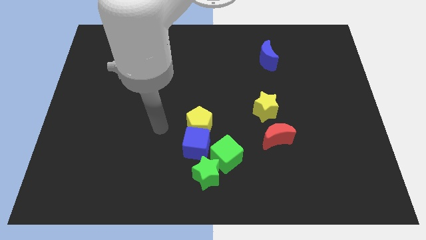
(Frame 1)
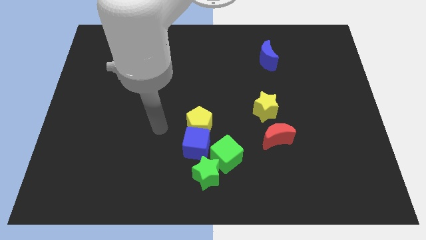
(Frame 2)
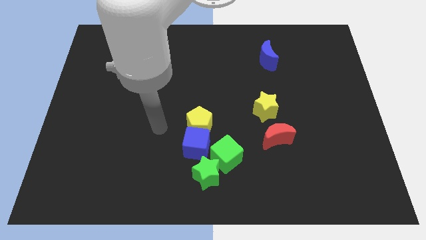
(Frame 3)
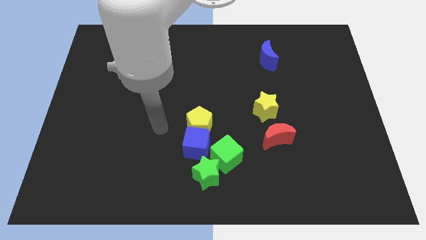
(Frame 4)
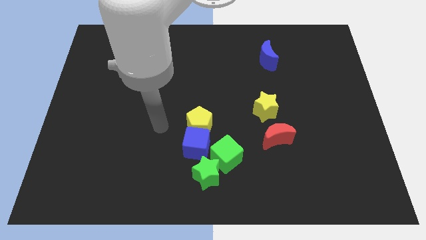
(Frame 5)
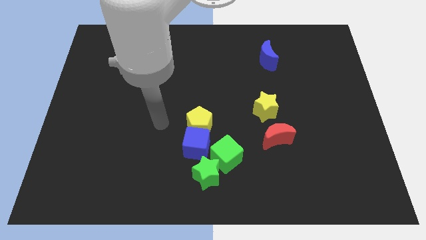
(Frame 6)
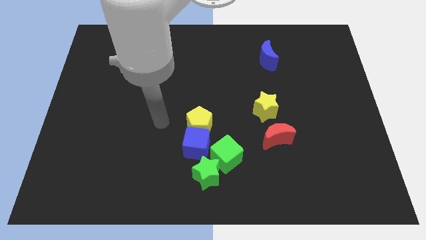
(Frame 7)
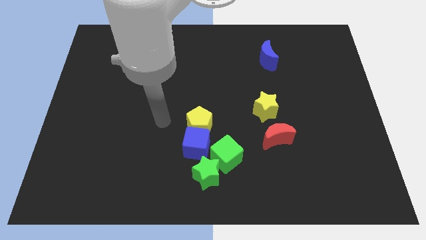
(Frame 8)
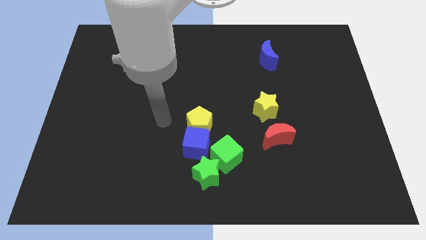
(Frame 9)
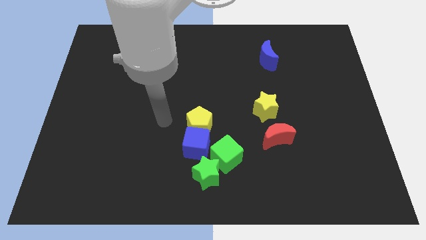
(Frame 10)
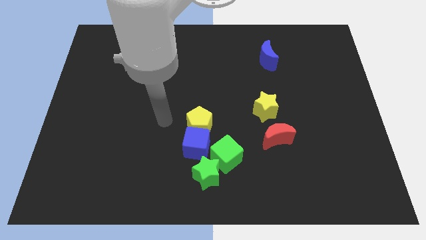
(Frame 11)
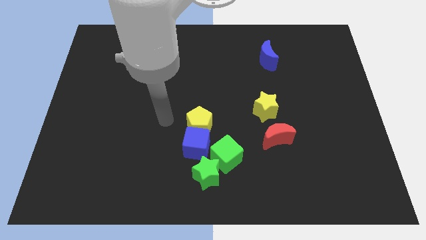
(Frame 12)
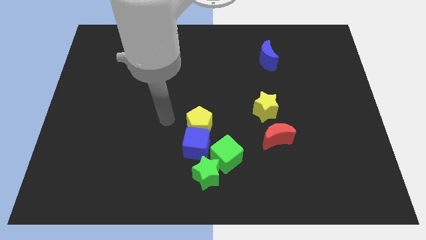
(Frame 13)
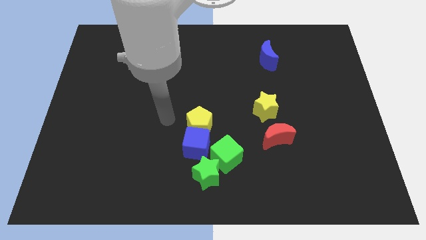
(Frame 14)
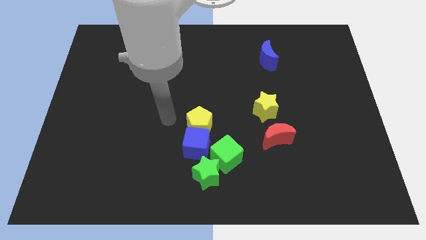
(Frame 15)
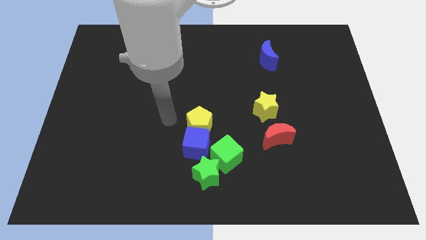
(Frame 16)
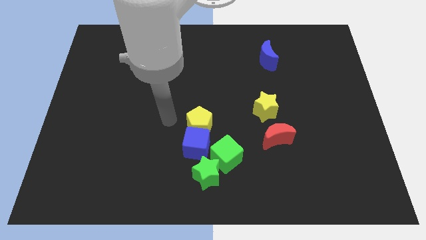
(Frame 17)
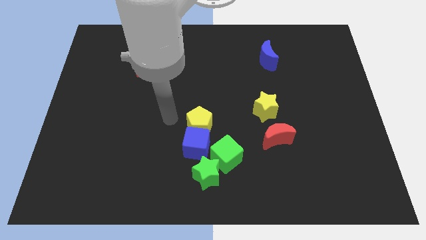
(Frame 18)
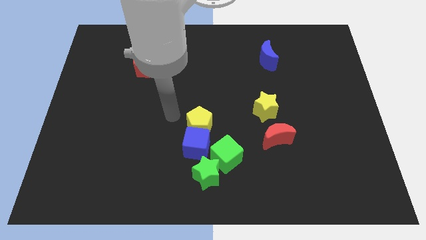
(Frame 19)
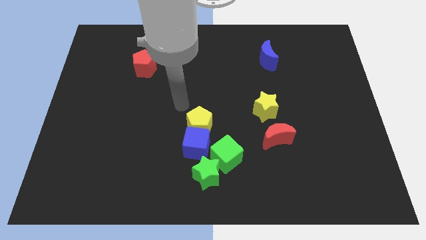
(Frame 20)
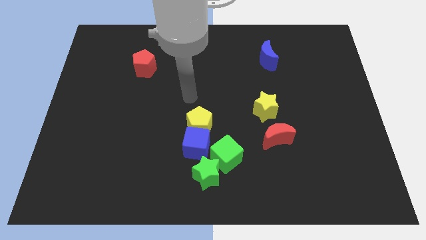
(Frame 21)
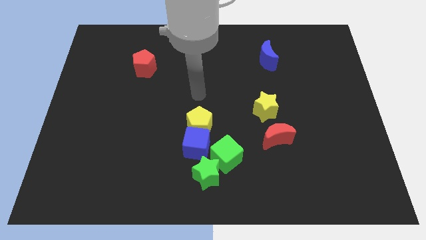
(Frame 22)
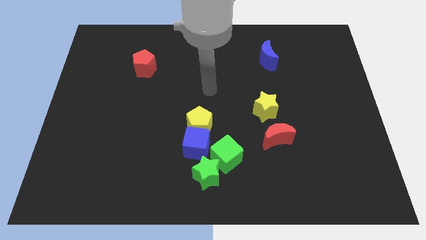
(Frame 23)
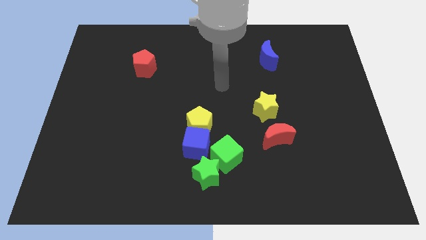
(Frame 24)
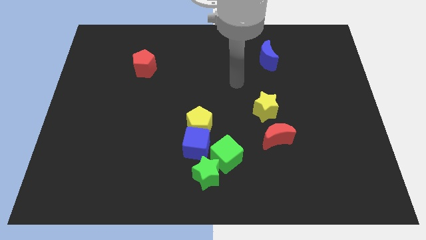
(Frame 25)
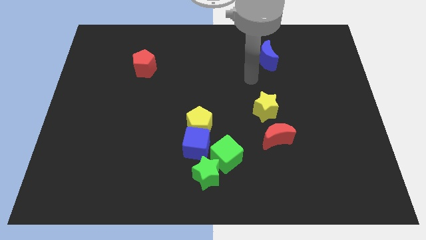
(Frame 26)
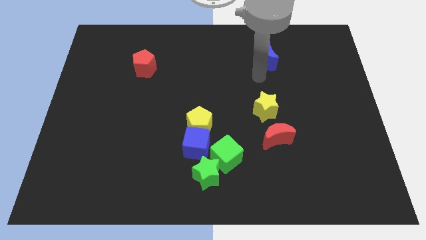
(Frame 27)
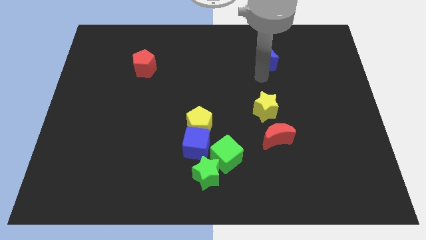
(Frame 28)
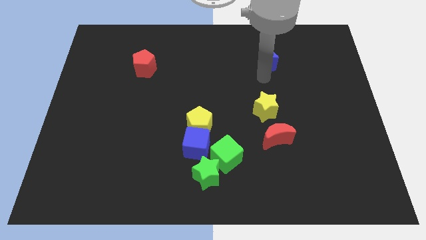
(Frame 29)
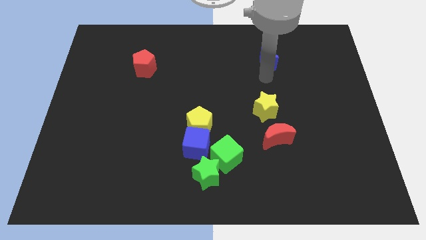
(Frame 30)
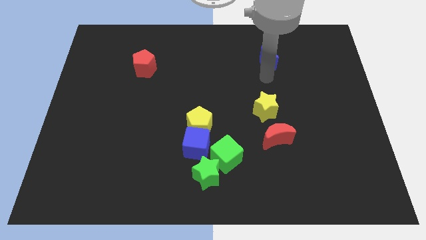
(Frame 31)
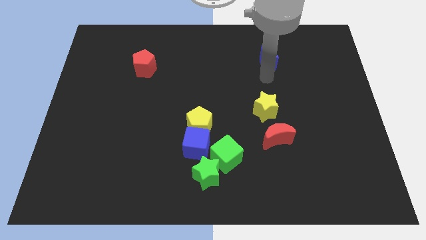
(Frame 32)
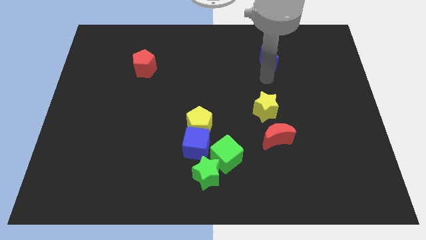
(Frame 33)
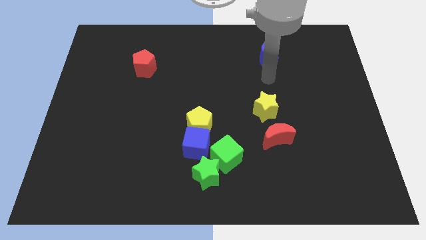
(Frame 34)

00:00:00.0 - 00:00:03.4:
move your hand in between yellow star and blue crescent

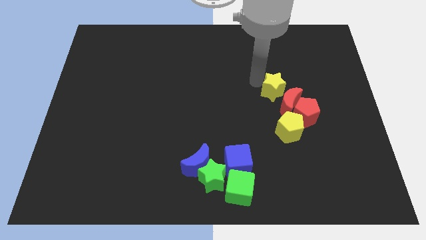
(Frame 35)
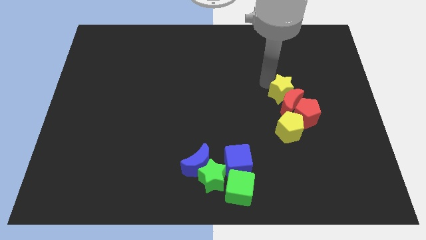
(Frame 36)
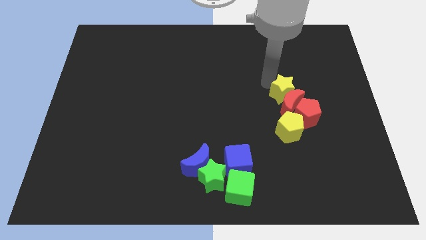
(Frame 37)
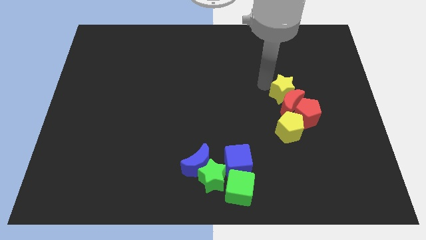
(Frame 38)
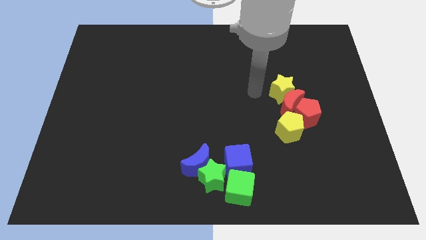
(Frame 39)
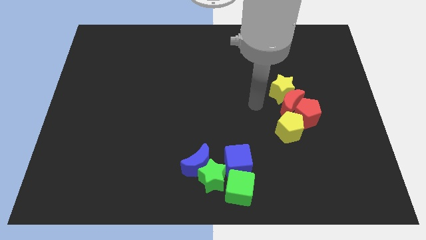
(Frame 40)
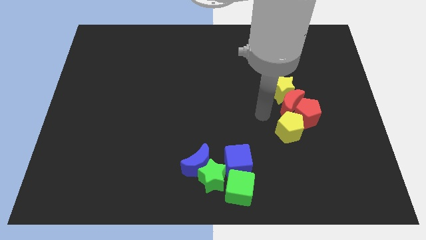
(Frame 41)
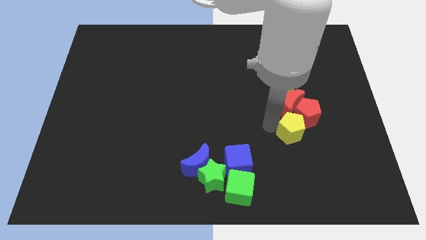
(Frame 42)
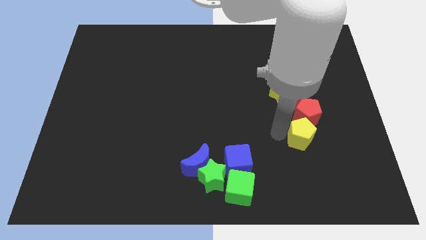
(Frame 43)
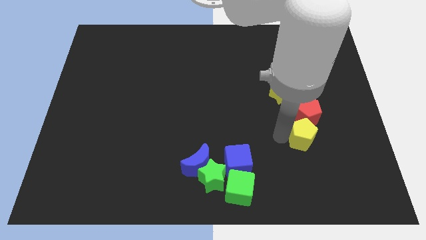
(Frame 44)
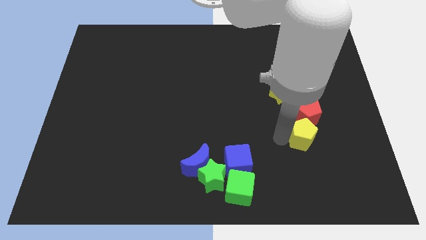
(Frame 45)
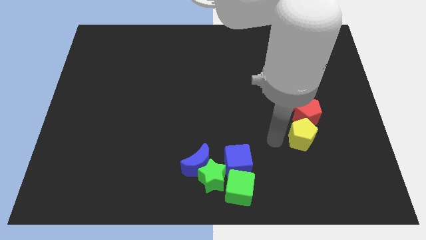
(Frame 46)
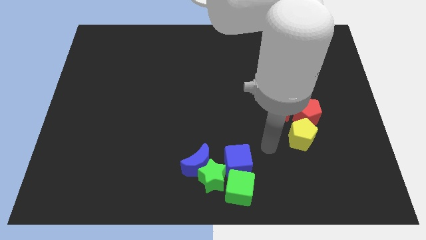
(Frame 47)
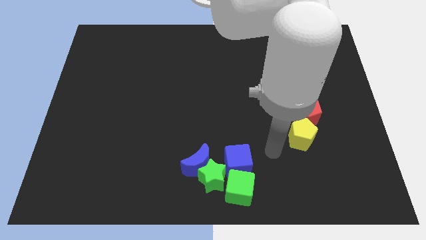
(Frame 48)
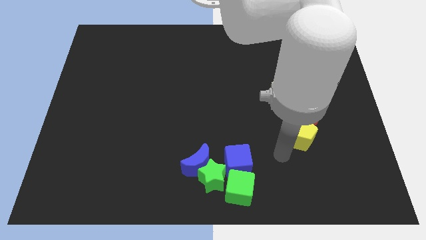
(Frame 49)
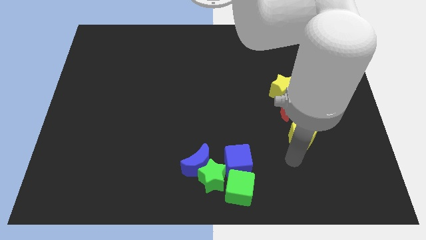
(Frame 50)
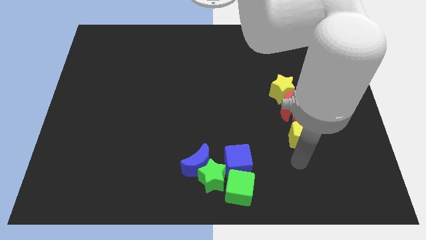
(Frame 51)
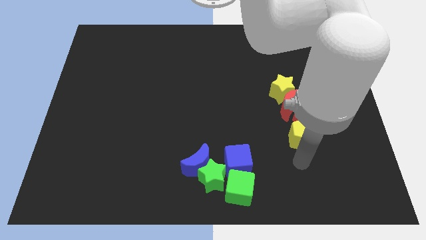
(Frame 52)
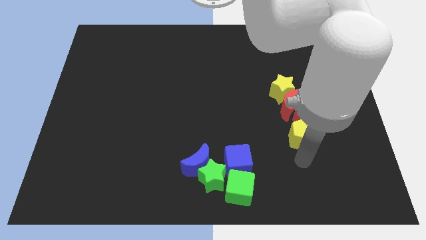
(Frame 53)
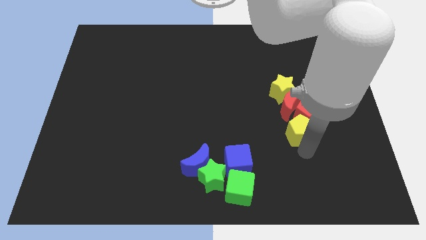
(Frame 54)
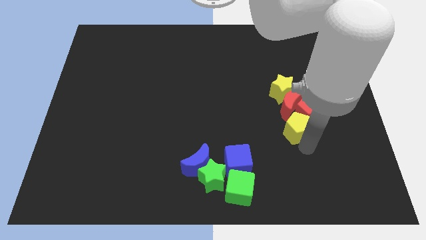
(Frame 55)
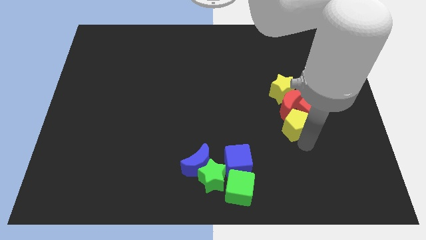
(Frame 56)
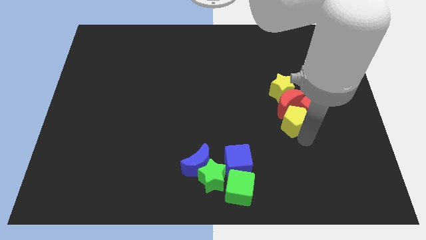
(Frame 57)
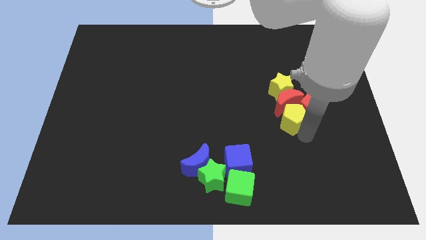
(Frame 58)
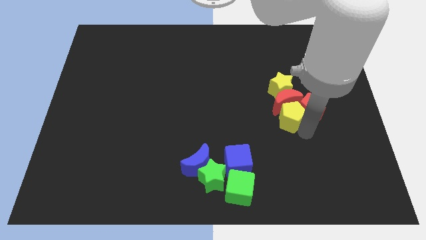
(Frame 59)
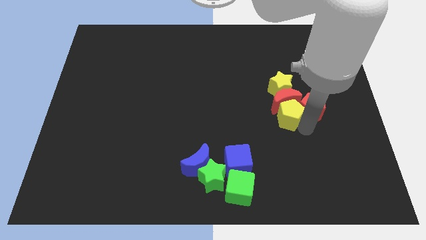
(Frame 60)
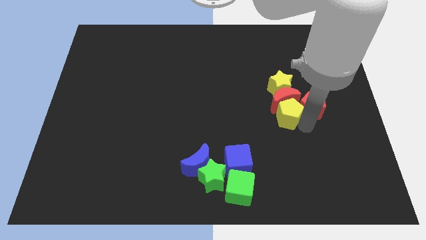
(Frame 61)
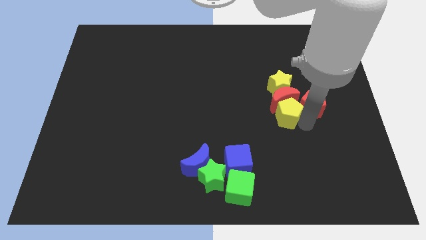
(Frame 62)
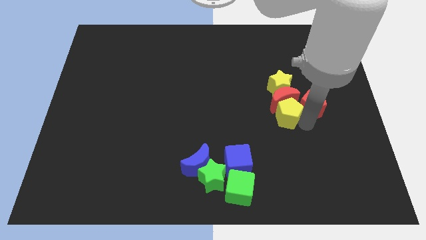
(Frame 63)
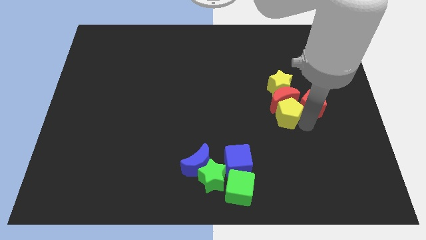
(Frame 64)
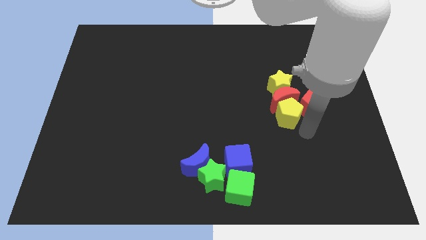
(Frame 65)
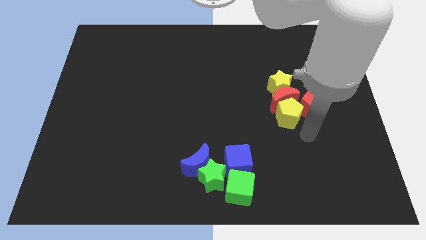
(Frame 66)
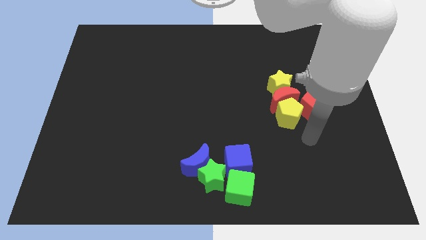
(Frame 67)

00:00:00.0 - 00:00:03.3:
make a group with yellow pentagon red pentagon red crescent and yellow star

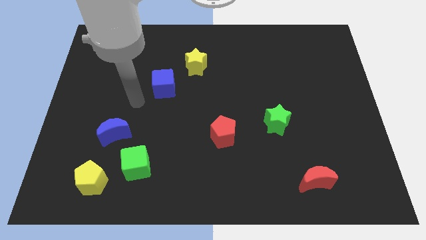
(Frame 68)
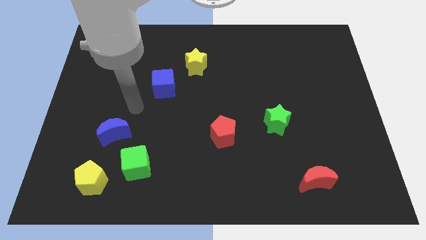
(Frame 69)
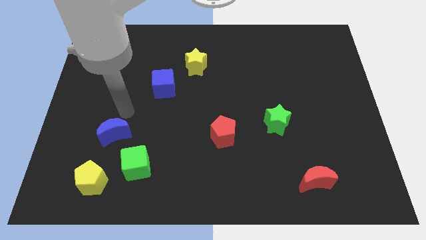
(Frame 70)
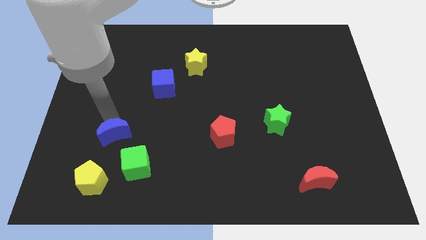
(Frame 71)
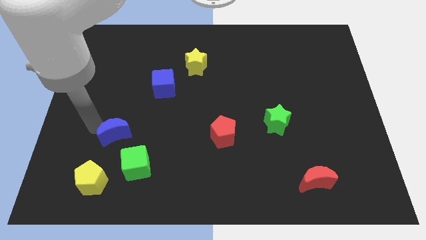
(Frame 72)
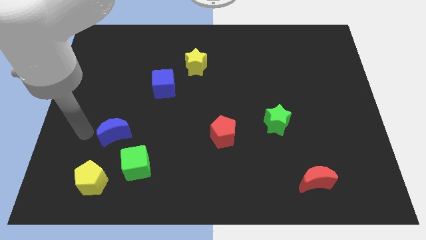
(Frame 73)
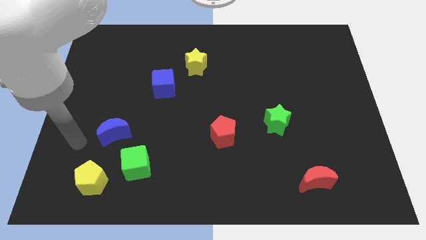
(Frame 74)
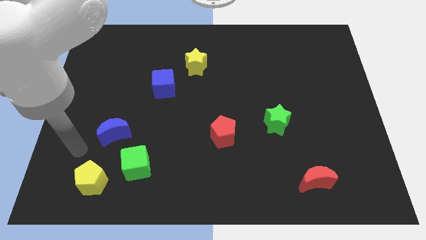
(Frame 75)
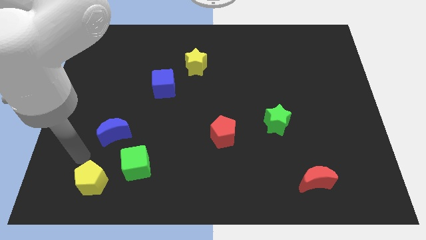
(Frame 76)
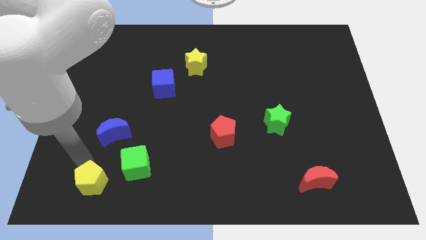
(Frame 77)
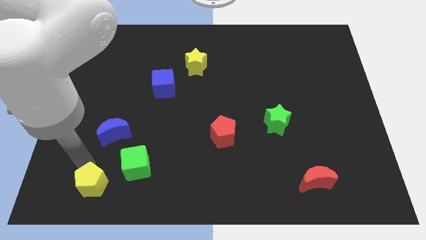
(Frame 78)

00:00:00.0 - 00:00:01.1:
touch the yellow pentagon at the top

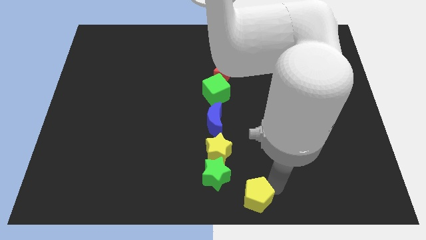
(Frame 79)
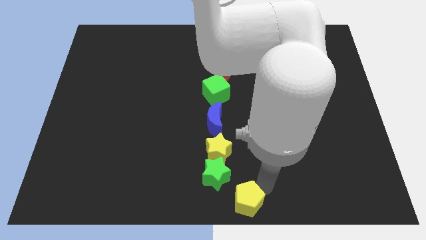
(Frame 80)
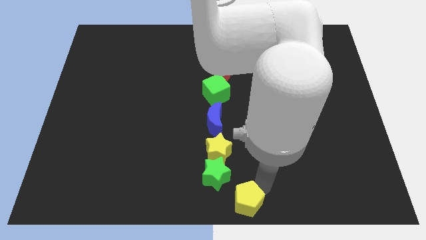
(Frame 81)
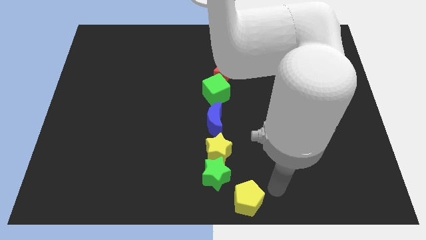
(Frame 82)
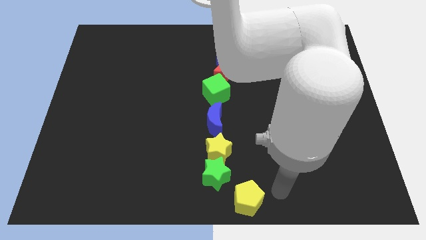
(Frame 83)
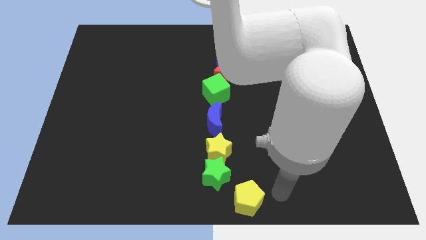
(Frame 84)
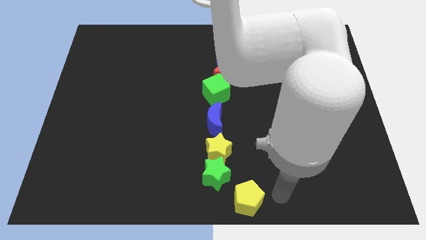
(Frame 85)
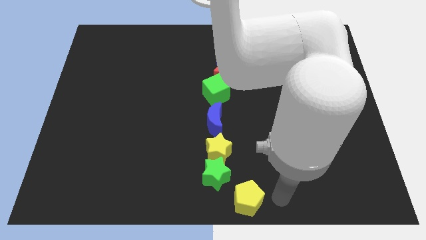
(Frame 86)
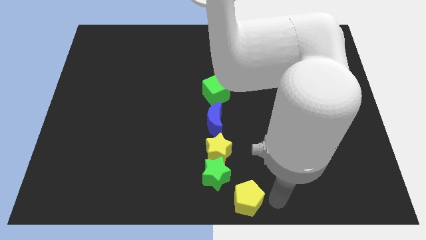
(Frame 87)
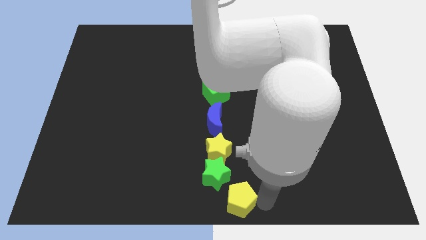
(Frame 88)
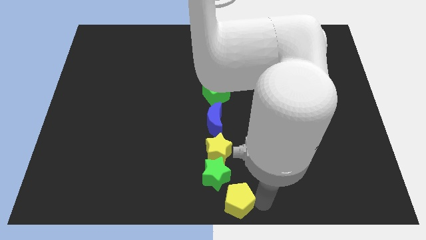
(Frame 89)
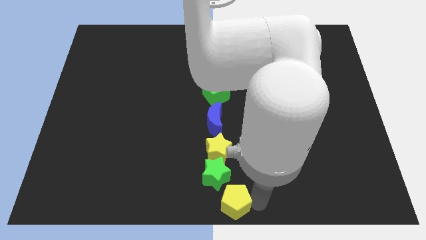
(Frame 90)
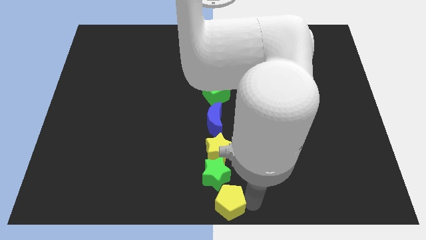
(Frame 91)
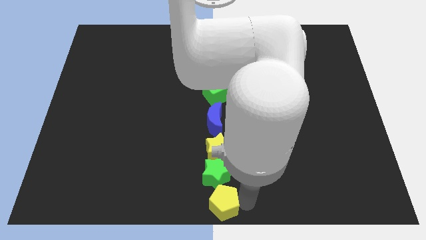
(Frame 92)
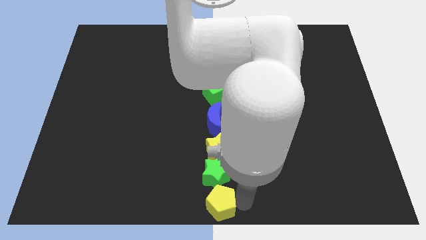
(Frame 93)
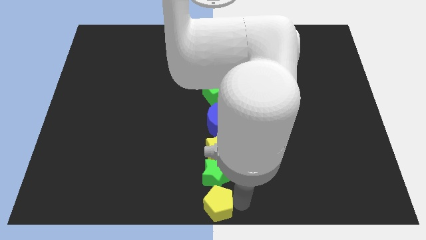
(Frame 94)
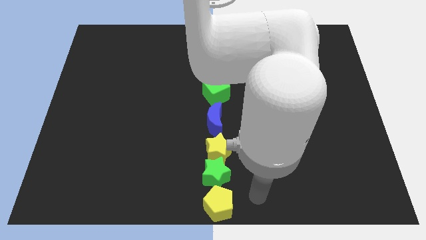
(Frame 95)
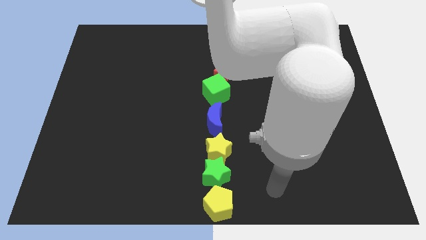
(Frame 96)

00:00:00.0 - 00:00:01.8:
place the yellow pentagon below to the green star
